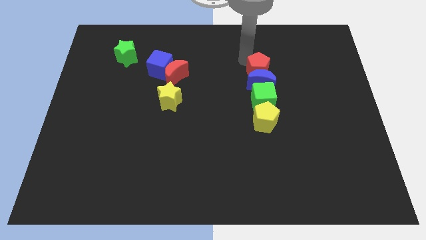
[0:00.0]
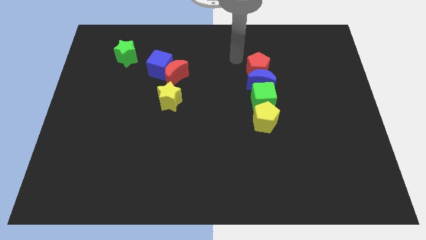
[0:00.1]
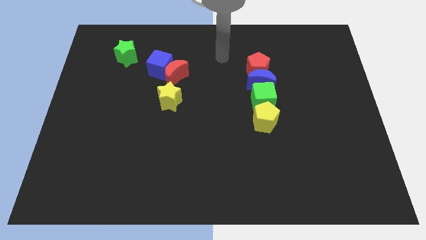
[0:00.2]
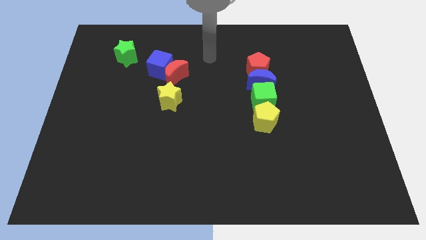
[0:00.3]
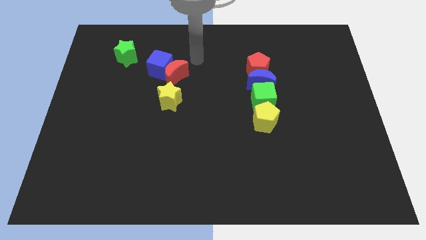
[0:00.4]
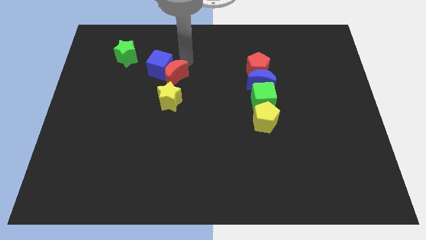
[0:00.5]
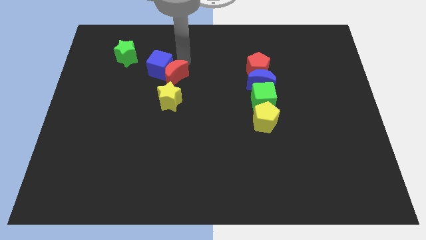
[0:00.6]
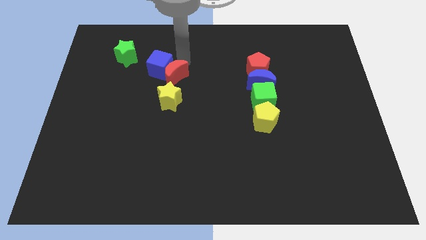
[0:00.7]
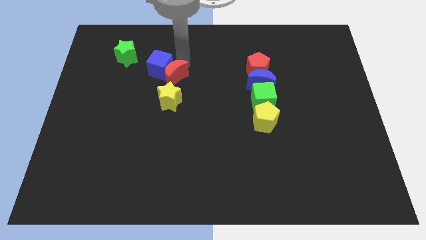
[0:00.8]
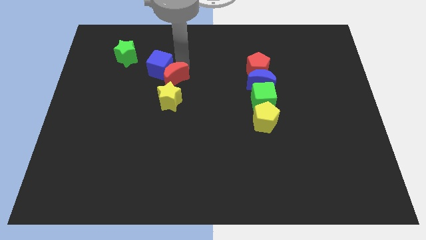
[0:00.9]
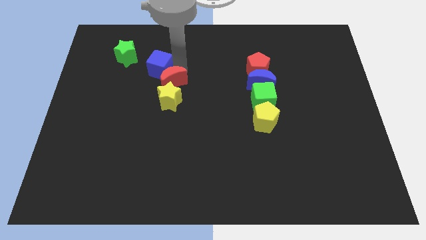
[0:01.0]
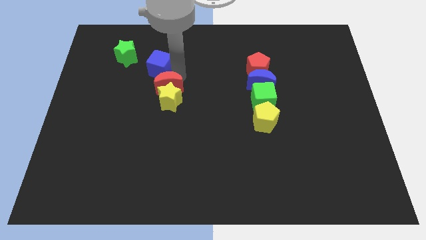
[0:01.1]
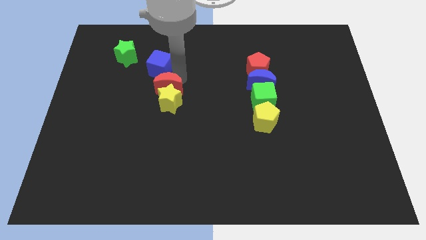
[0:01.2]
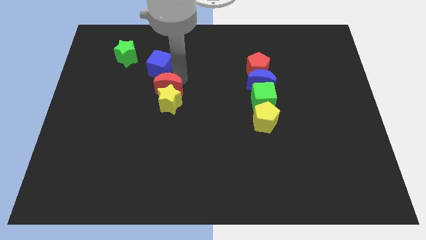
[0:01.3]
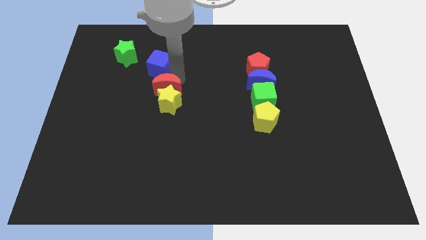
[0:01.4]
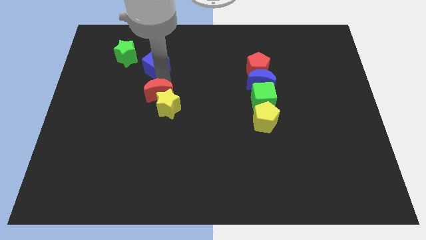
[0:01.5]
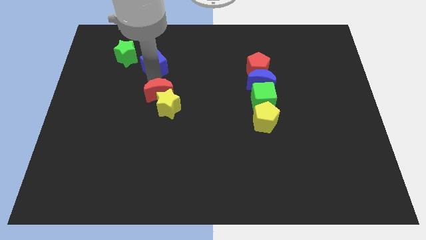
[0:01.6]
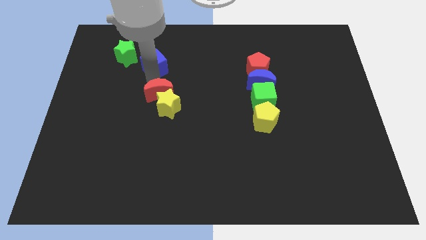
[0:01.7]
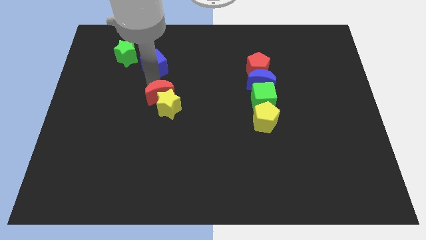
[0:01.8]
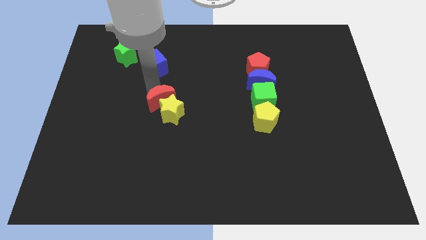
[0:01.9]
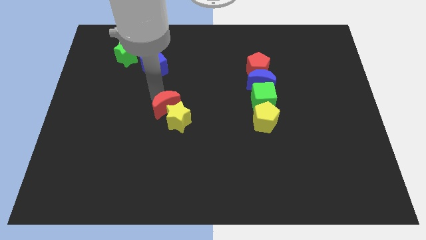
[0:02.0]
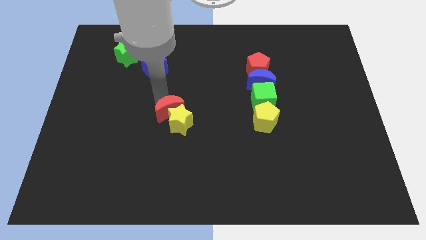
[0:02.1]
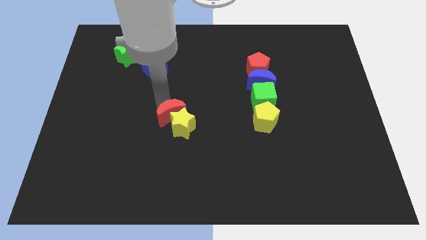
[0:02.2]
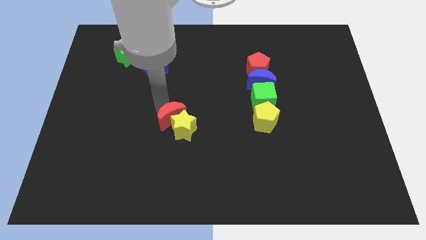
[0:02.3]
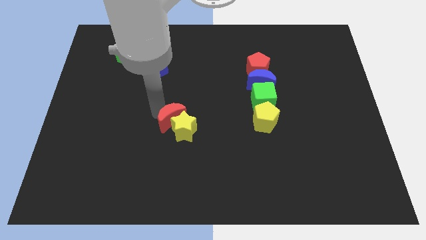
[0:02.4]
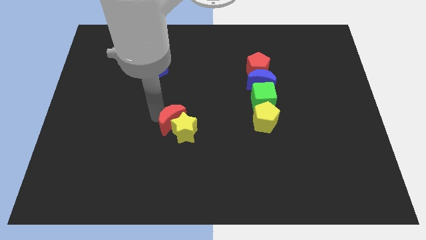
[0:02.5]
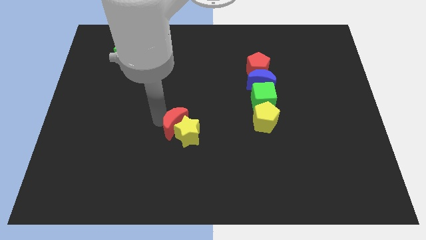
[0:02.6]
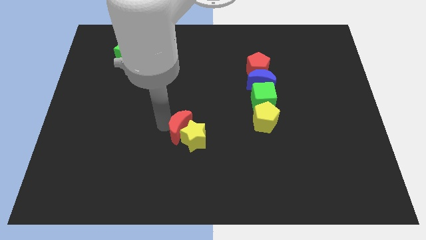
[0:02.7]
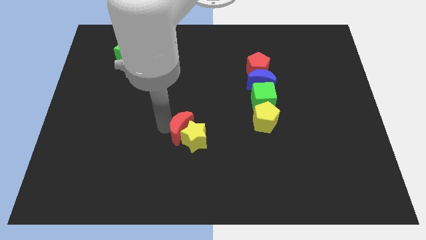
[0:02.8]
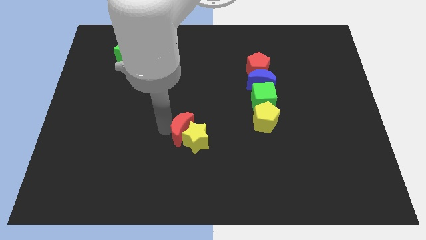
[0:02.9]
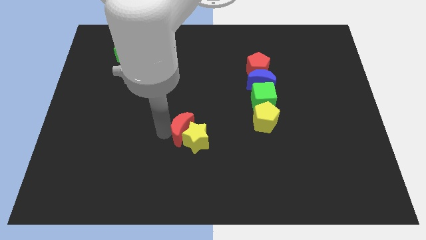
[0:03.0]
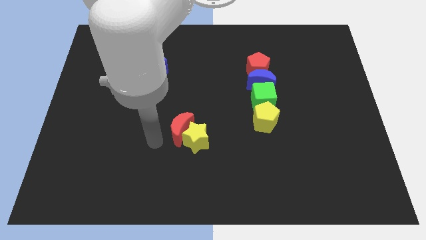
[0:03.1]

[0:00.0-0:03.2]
push the red crescent and yellow star towards teh bottom side of the table

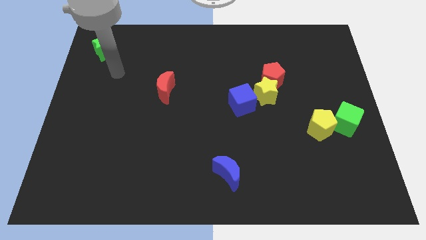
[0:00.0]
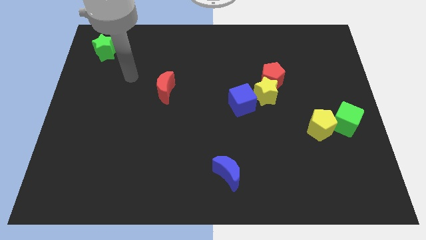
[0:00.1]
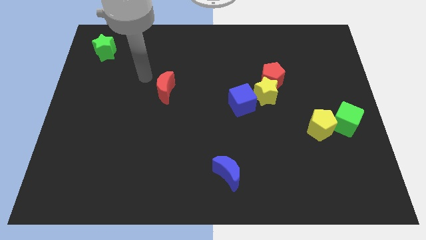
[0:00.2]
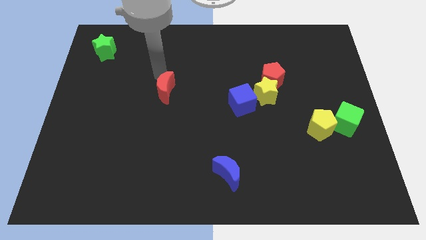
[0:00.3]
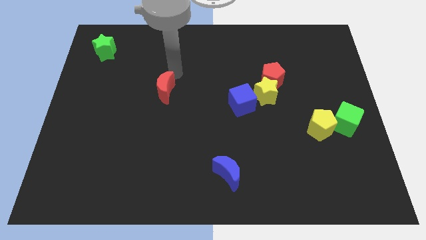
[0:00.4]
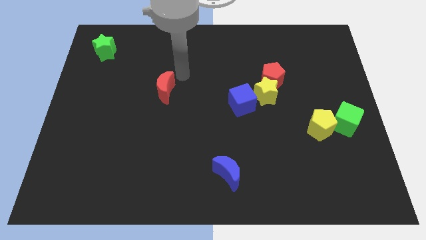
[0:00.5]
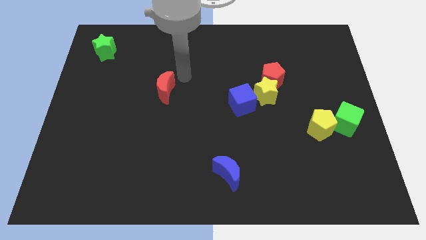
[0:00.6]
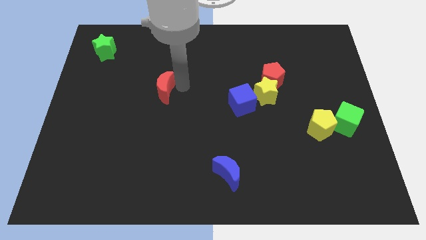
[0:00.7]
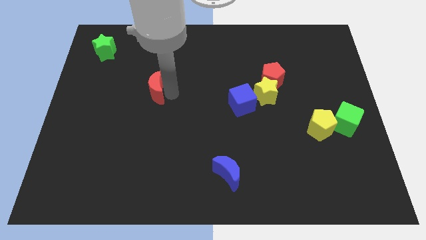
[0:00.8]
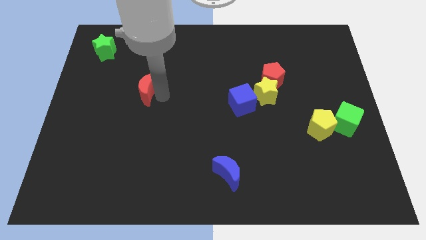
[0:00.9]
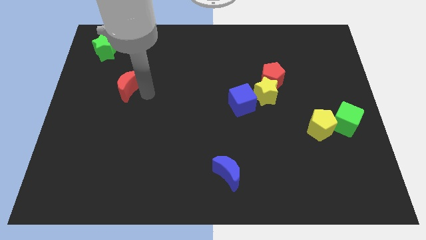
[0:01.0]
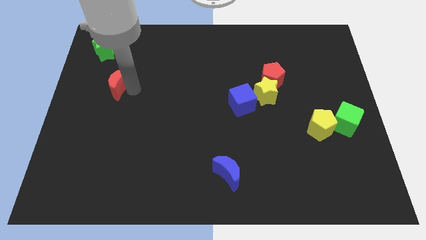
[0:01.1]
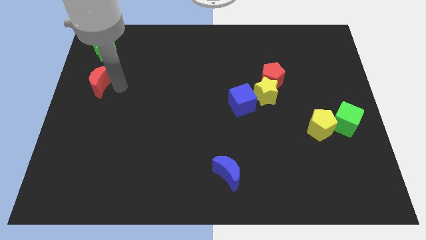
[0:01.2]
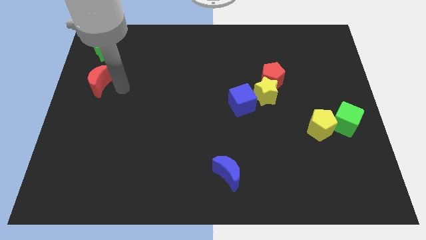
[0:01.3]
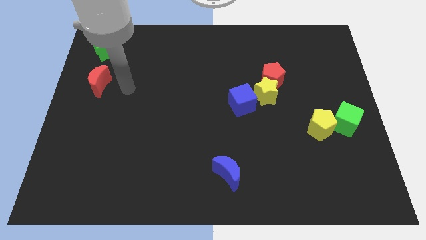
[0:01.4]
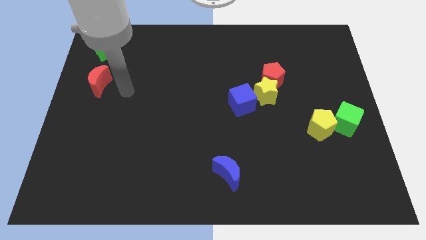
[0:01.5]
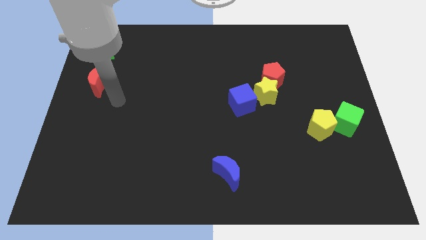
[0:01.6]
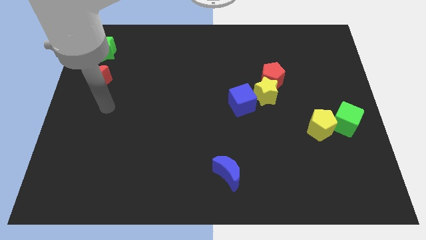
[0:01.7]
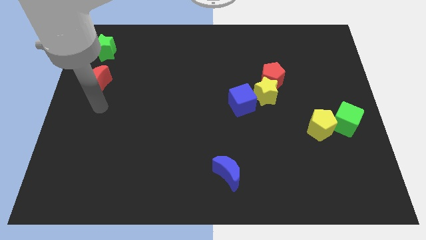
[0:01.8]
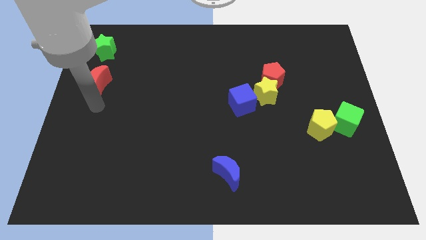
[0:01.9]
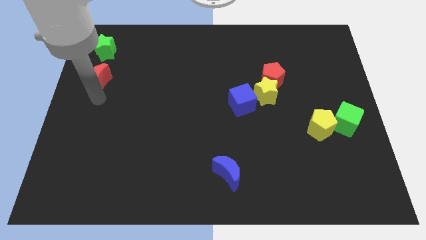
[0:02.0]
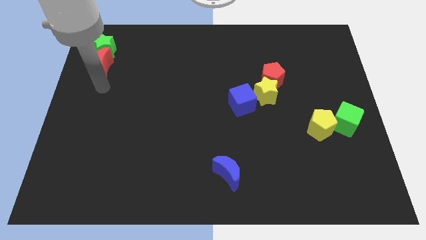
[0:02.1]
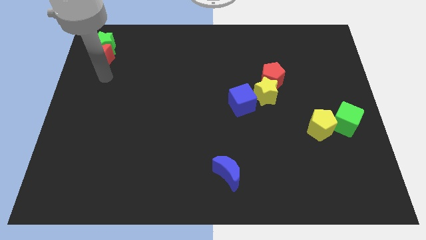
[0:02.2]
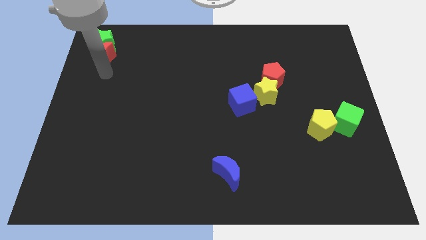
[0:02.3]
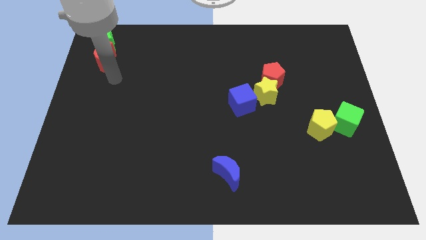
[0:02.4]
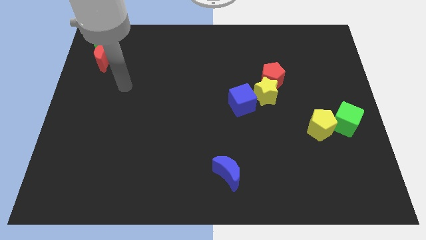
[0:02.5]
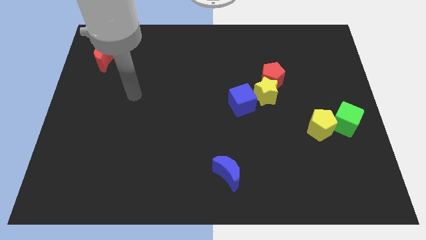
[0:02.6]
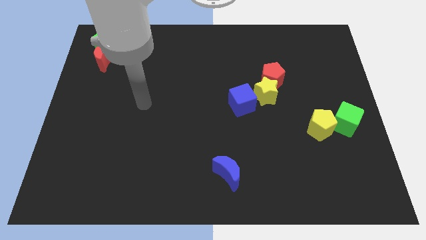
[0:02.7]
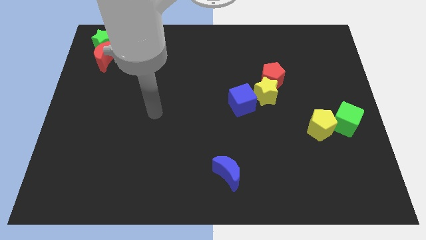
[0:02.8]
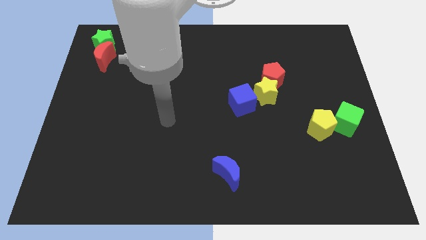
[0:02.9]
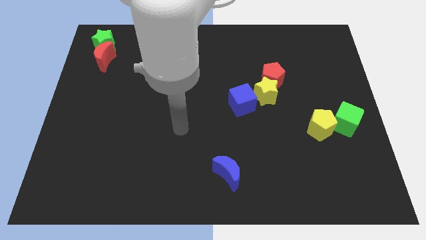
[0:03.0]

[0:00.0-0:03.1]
push the red moon into green star

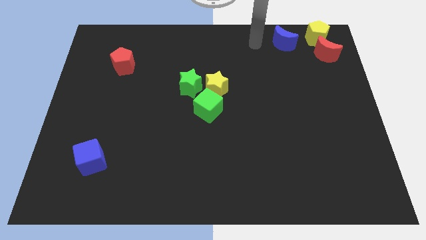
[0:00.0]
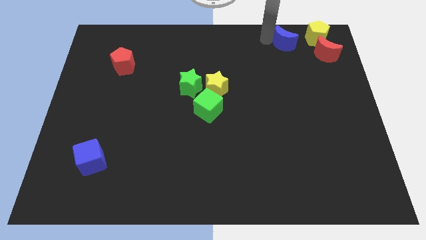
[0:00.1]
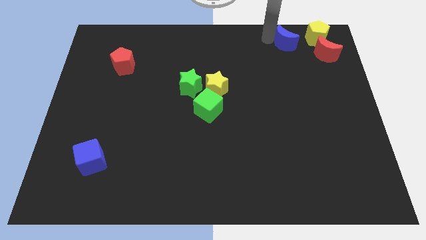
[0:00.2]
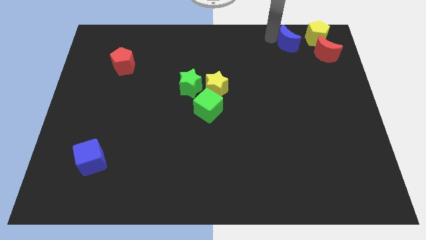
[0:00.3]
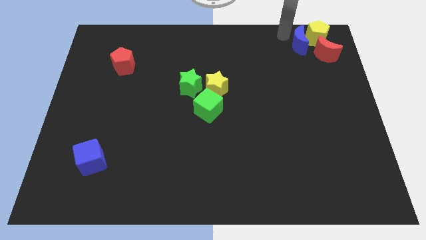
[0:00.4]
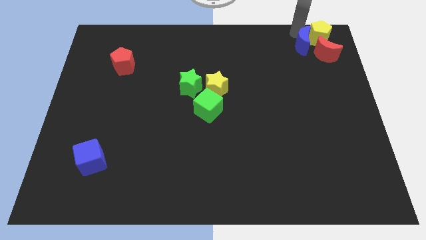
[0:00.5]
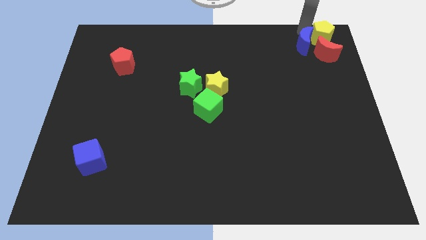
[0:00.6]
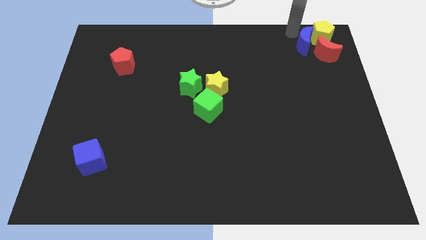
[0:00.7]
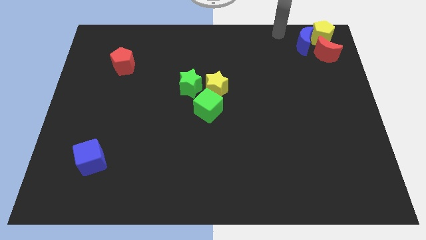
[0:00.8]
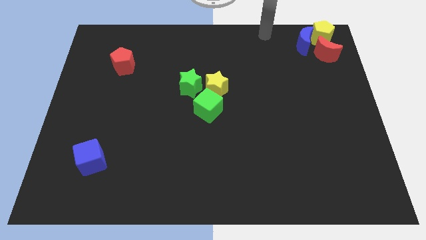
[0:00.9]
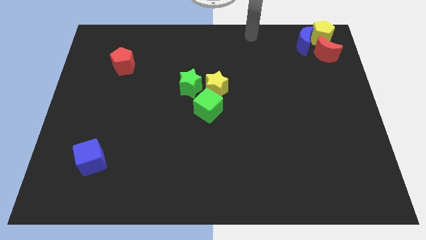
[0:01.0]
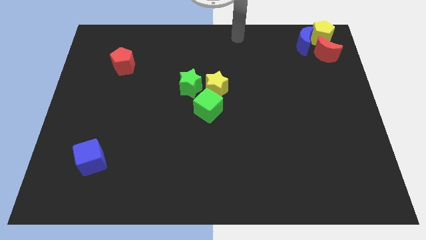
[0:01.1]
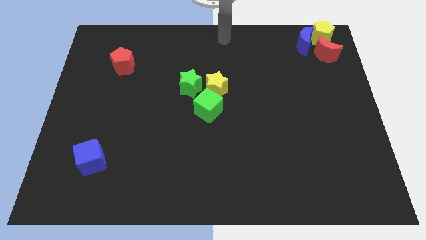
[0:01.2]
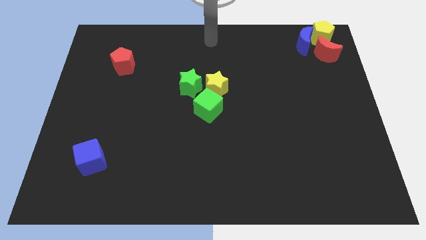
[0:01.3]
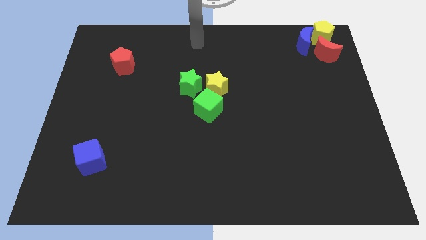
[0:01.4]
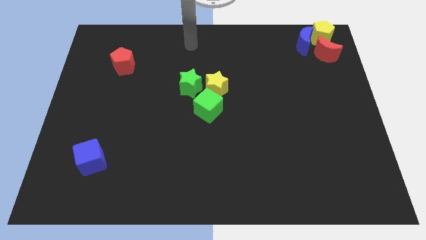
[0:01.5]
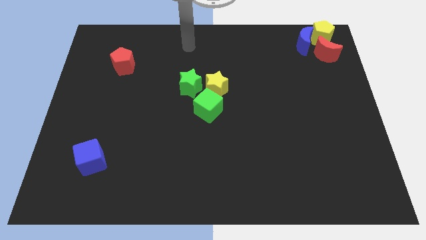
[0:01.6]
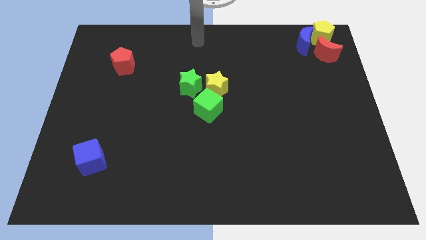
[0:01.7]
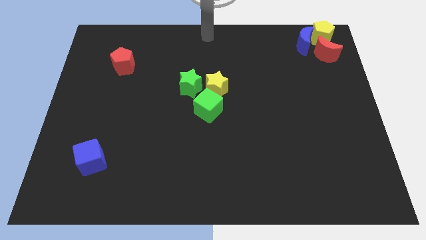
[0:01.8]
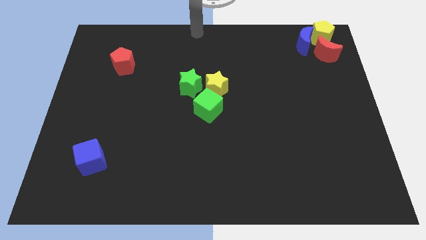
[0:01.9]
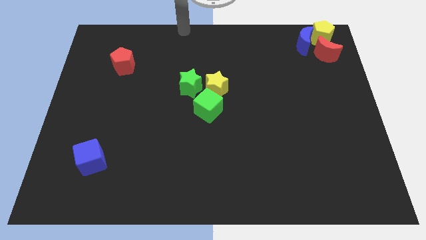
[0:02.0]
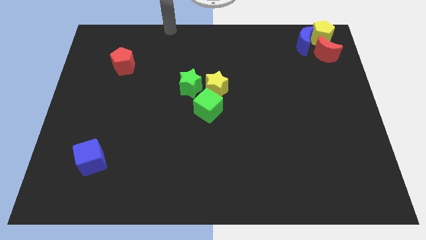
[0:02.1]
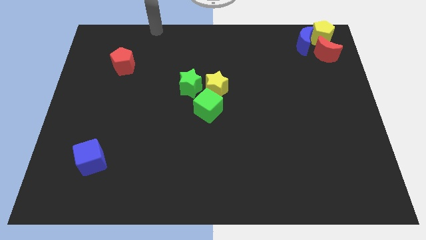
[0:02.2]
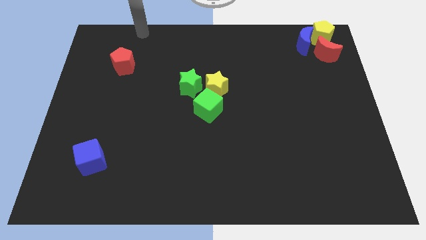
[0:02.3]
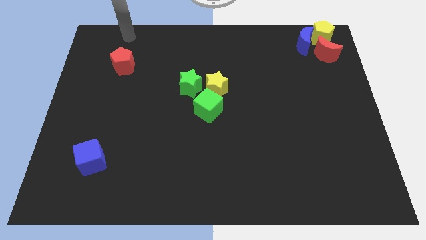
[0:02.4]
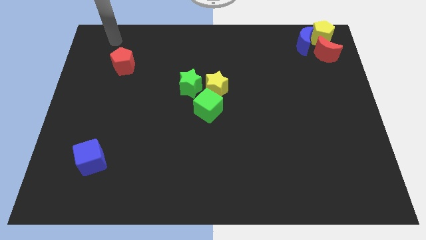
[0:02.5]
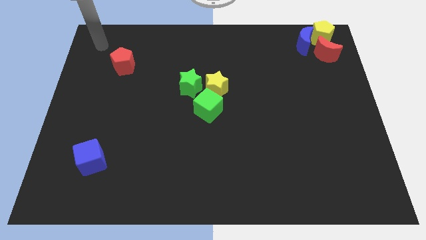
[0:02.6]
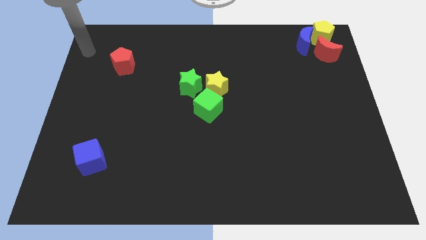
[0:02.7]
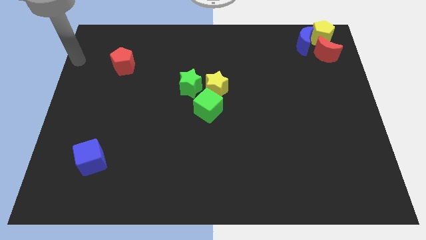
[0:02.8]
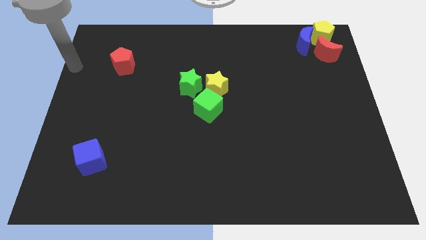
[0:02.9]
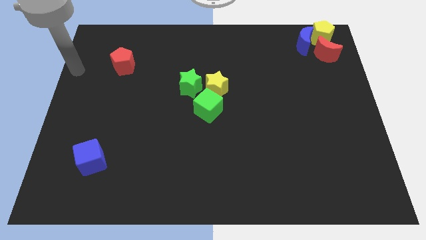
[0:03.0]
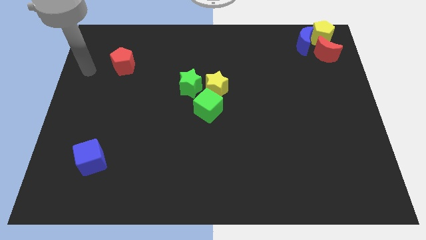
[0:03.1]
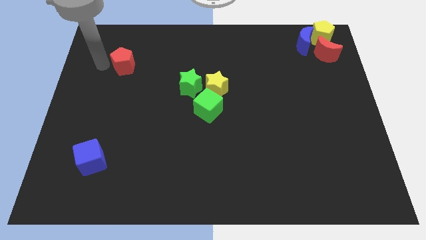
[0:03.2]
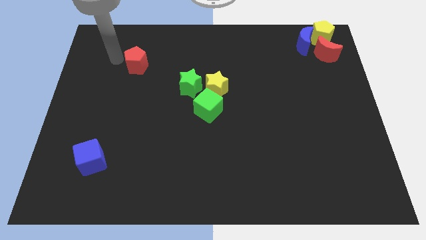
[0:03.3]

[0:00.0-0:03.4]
place the arm left to the red pentagon
